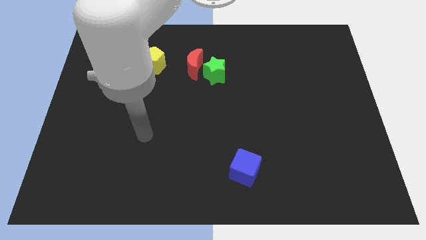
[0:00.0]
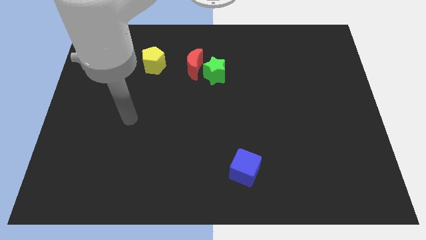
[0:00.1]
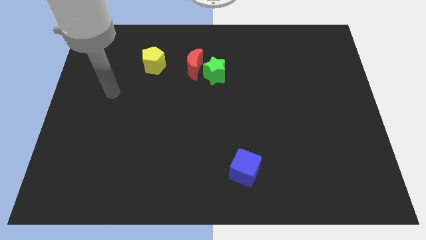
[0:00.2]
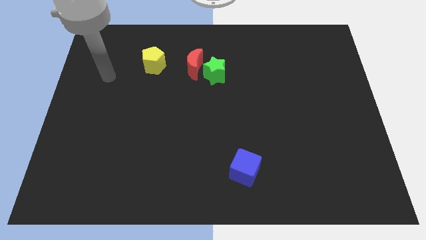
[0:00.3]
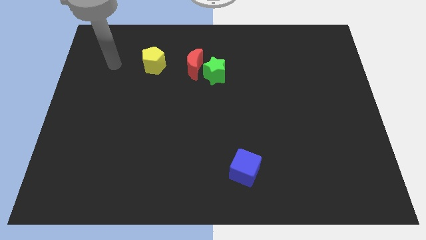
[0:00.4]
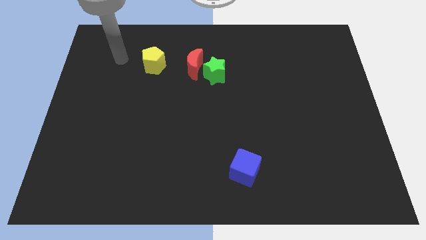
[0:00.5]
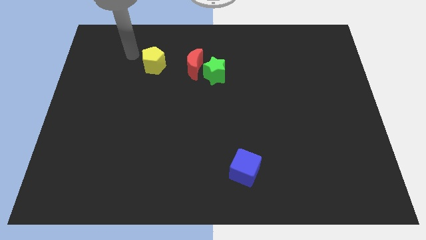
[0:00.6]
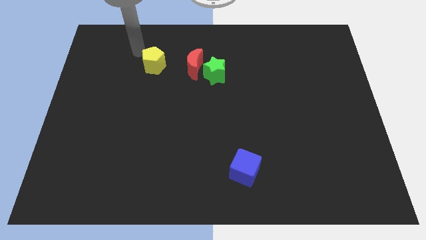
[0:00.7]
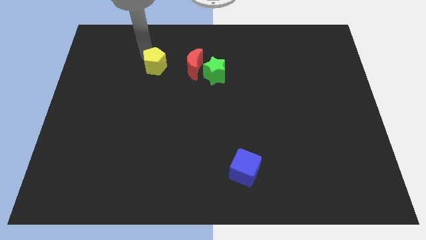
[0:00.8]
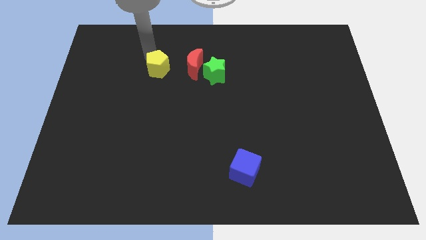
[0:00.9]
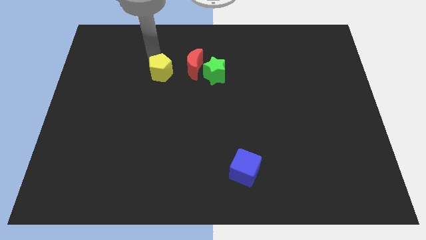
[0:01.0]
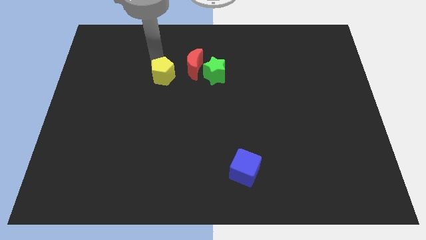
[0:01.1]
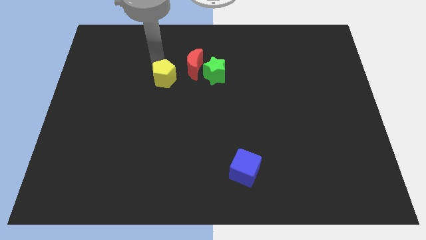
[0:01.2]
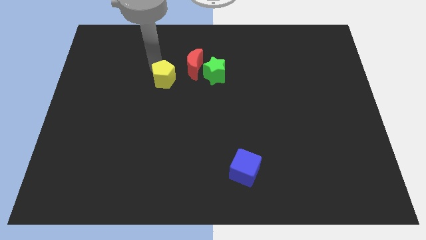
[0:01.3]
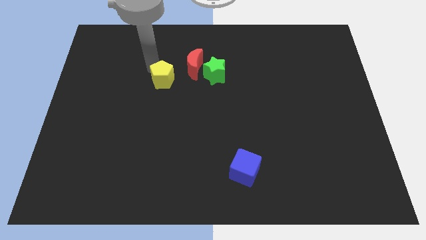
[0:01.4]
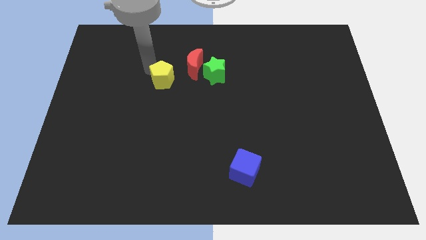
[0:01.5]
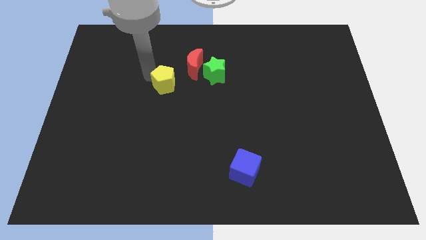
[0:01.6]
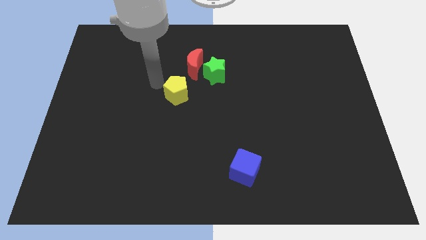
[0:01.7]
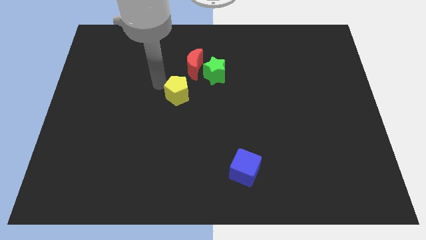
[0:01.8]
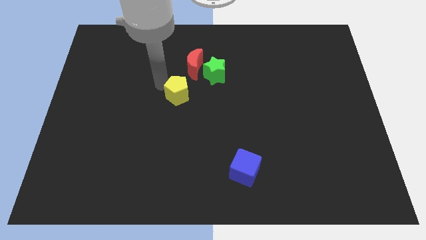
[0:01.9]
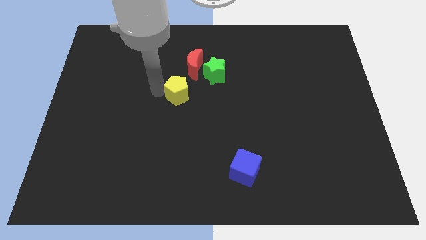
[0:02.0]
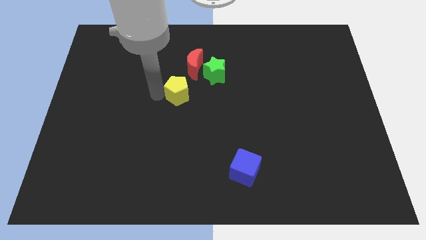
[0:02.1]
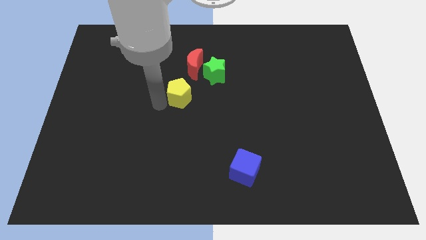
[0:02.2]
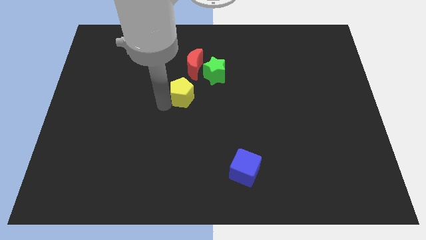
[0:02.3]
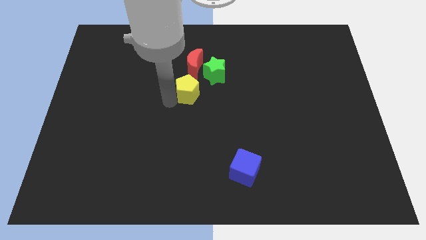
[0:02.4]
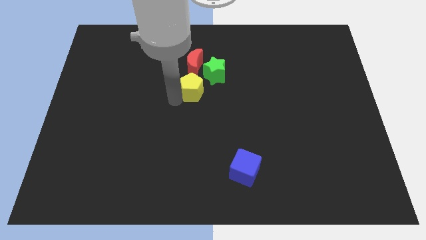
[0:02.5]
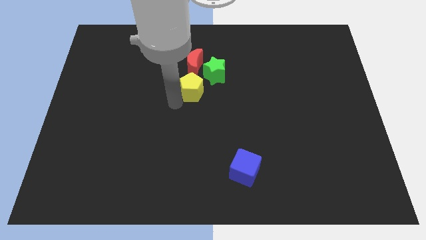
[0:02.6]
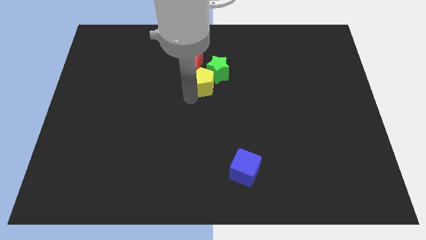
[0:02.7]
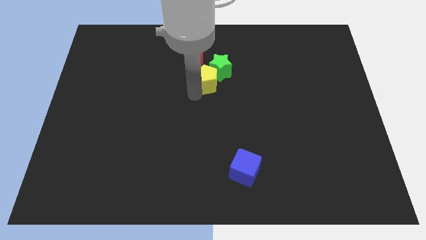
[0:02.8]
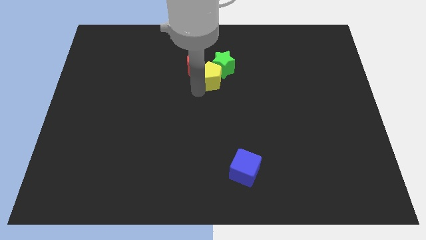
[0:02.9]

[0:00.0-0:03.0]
slide the yellow block to the green block

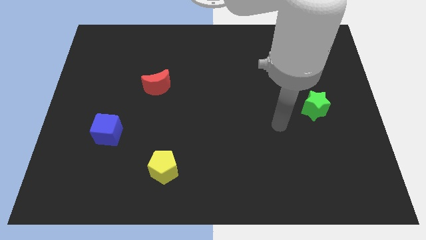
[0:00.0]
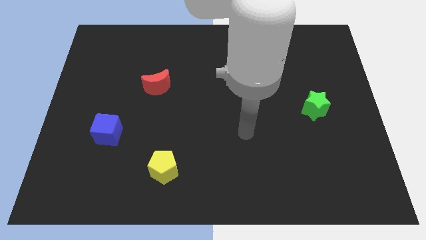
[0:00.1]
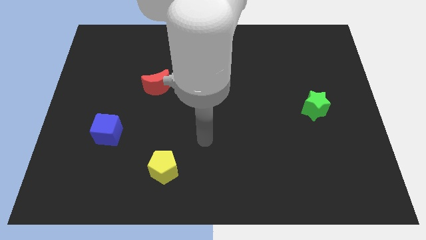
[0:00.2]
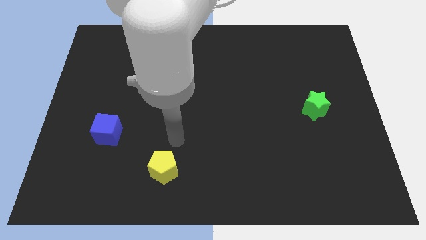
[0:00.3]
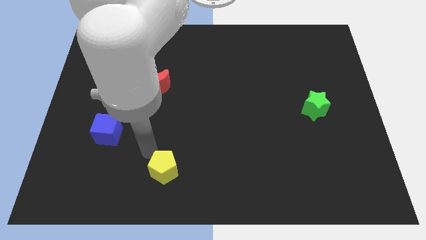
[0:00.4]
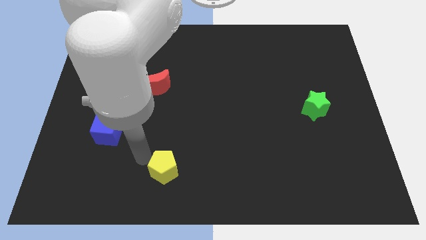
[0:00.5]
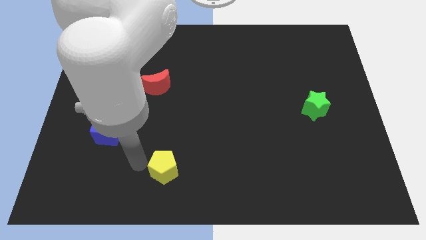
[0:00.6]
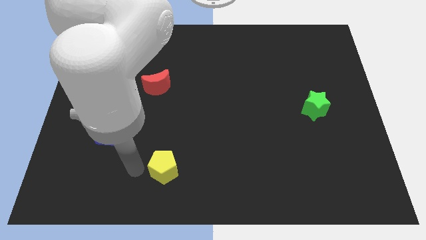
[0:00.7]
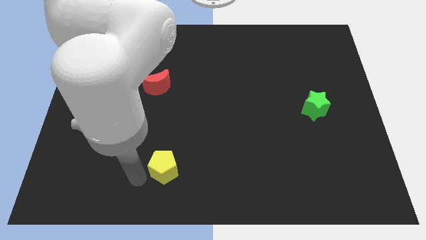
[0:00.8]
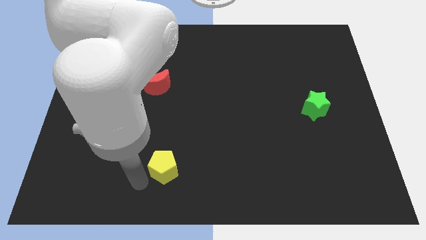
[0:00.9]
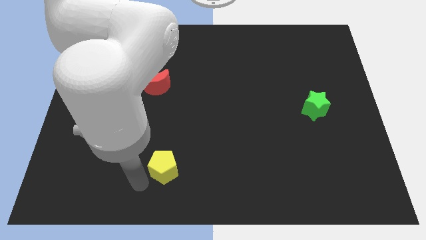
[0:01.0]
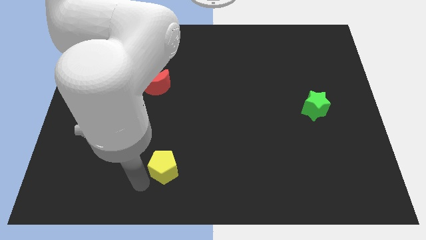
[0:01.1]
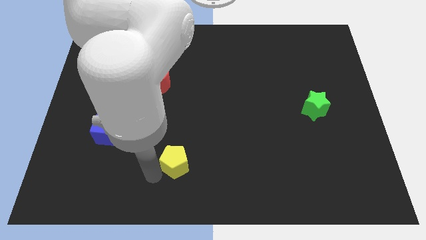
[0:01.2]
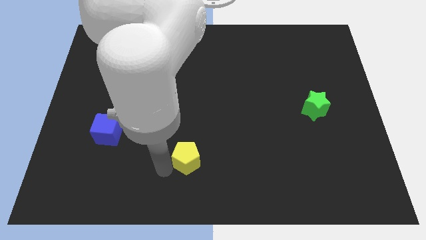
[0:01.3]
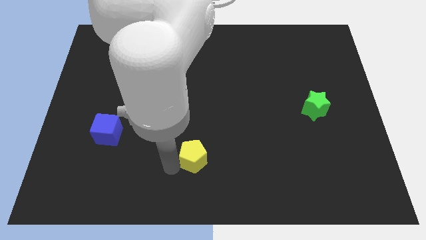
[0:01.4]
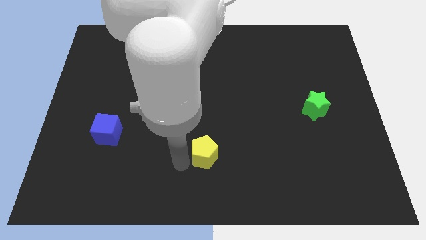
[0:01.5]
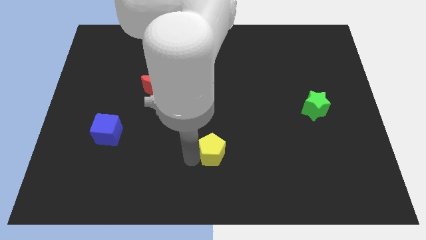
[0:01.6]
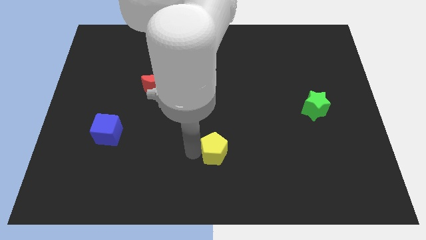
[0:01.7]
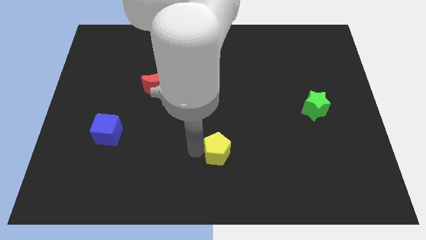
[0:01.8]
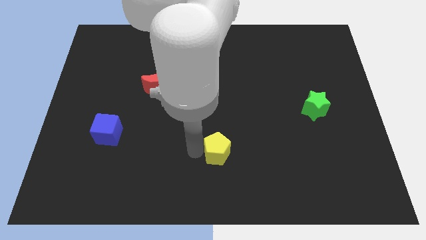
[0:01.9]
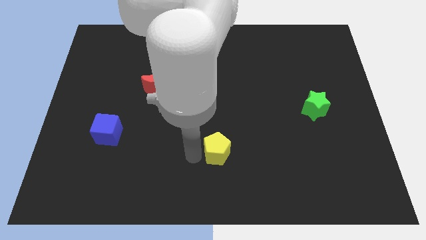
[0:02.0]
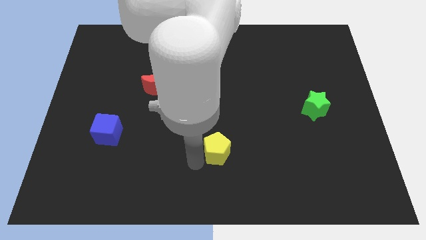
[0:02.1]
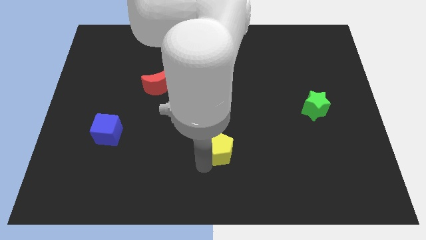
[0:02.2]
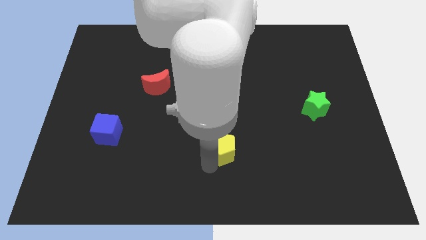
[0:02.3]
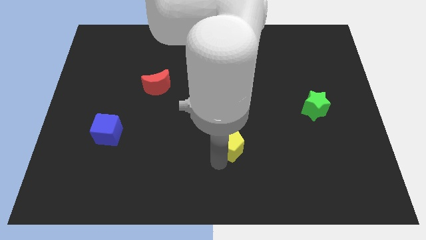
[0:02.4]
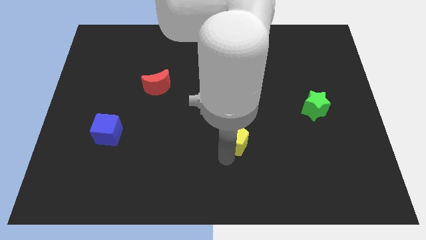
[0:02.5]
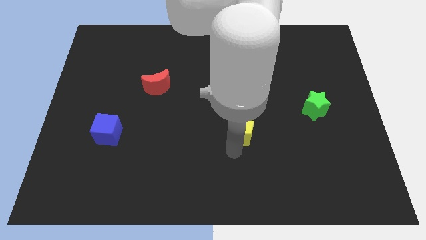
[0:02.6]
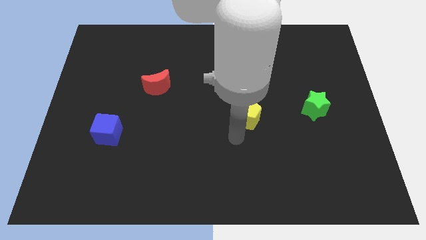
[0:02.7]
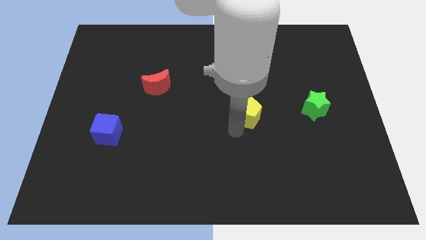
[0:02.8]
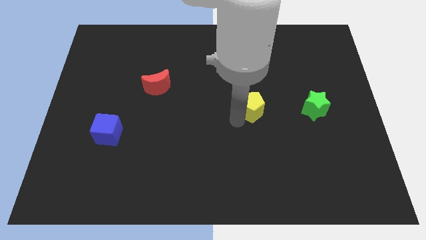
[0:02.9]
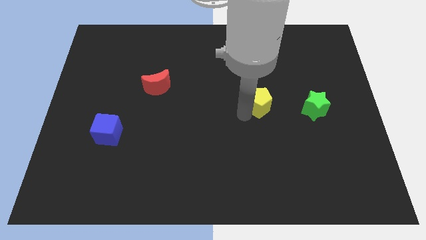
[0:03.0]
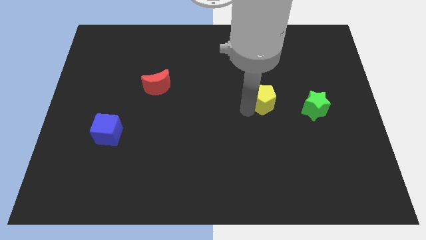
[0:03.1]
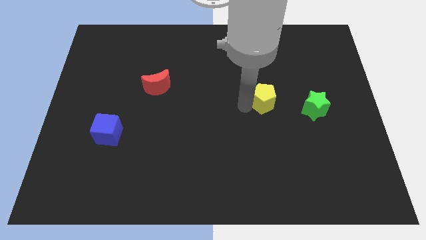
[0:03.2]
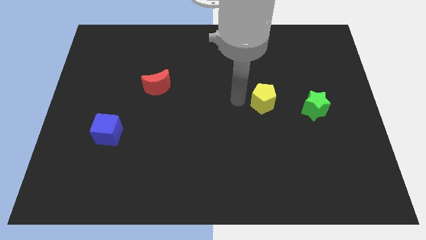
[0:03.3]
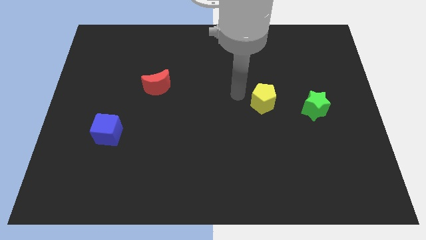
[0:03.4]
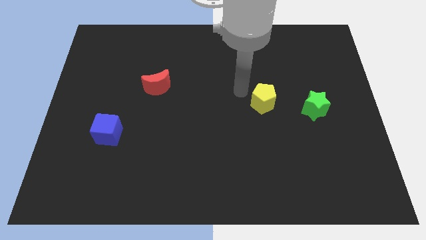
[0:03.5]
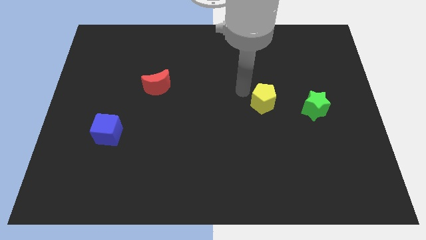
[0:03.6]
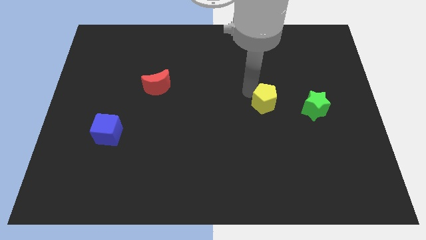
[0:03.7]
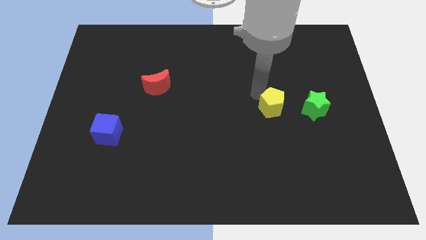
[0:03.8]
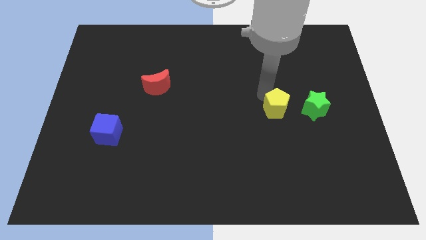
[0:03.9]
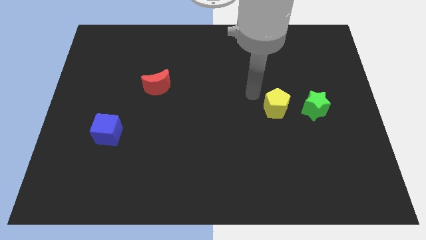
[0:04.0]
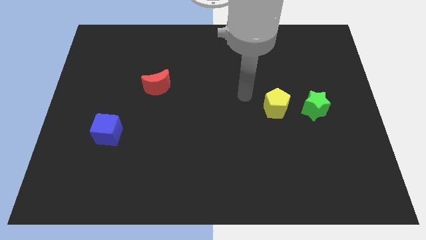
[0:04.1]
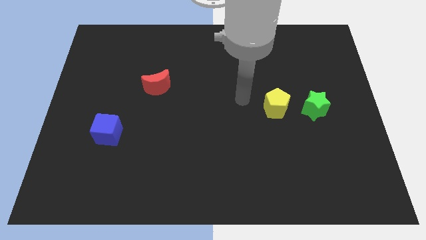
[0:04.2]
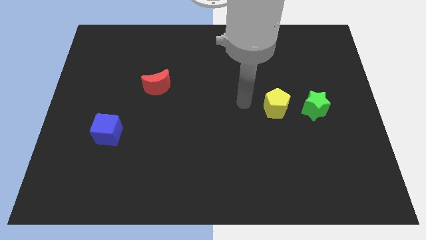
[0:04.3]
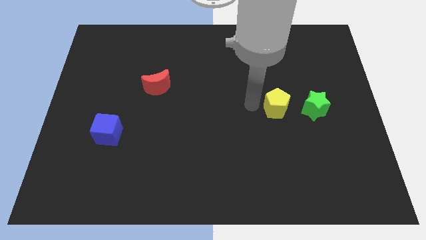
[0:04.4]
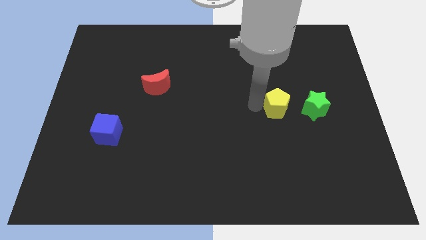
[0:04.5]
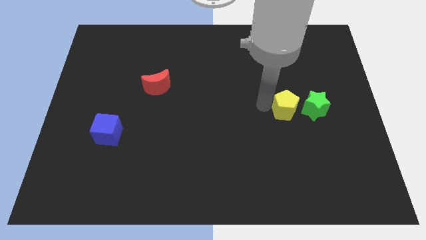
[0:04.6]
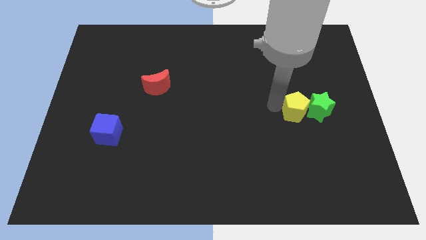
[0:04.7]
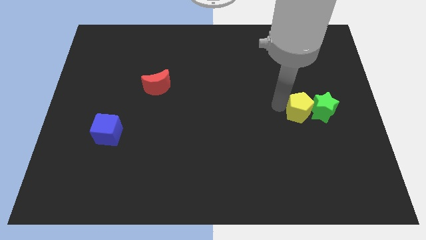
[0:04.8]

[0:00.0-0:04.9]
put the yellow block next to the green star

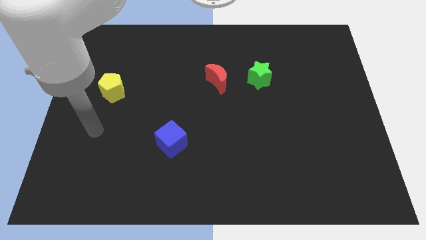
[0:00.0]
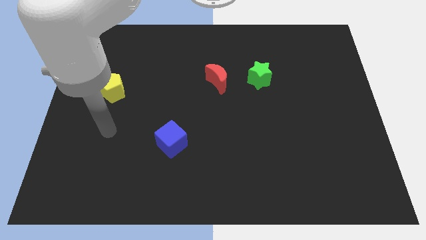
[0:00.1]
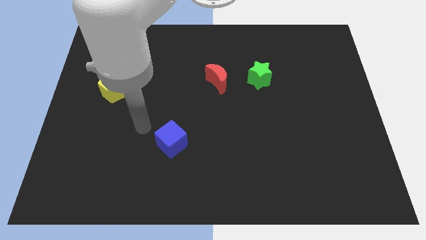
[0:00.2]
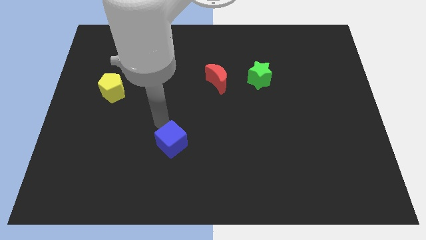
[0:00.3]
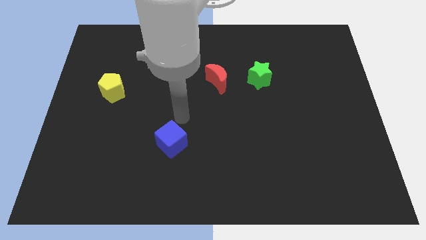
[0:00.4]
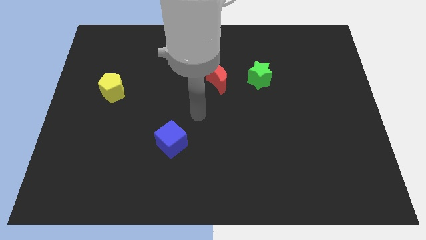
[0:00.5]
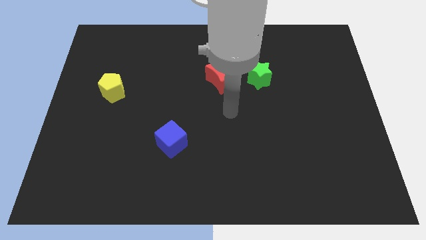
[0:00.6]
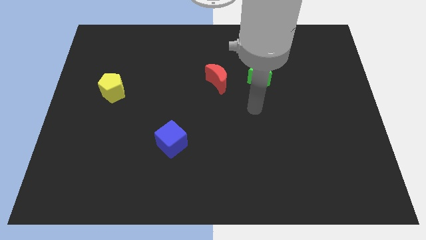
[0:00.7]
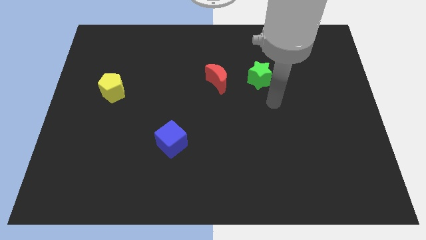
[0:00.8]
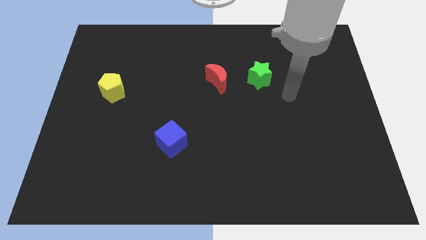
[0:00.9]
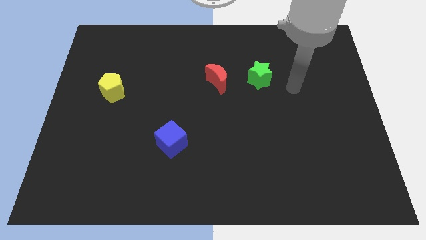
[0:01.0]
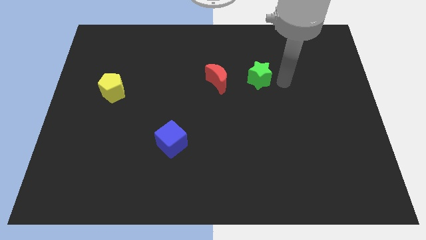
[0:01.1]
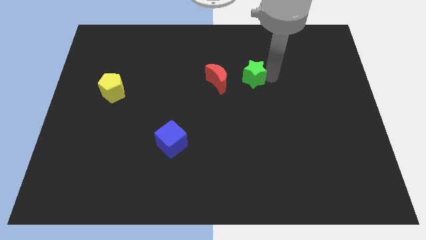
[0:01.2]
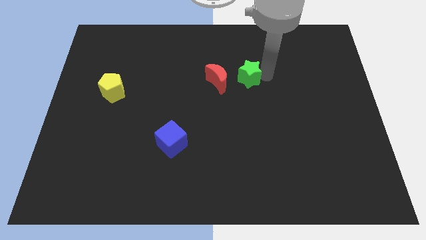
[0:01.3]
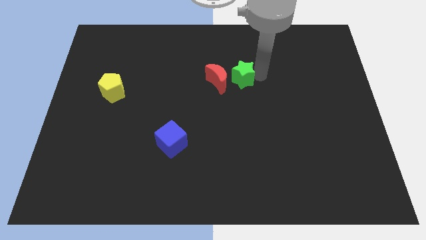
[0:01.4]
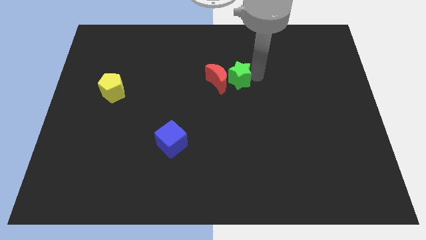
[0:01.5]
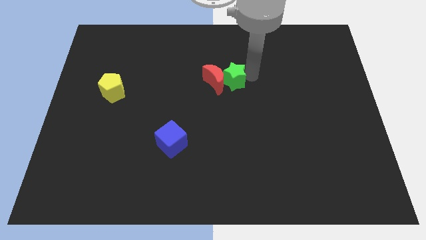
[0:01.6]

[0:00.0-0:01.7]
put the star next to the red moon
